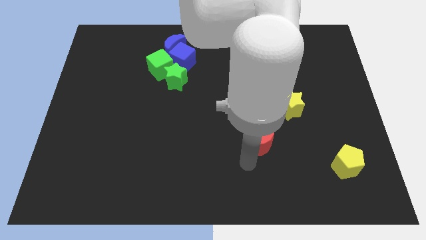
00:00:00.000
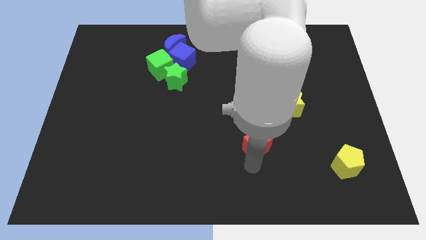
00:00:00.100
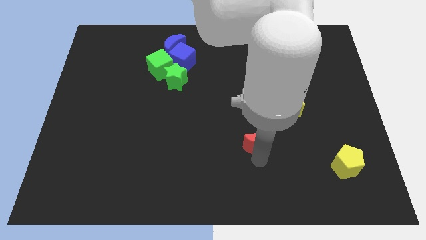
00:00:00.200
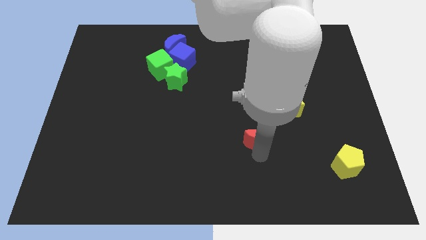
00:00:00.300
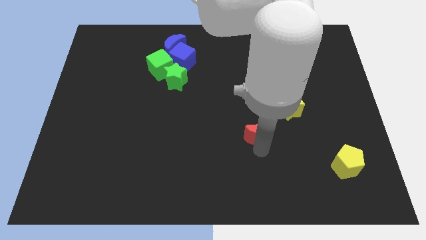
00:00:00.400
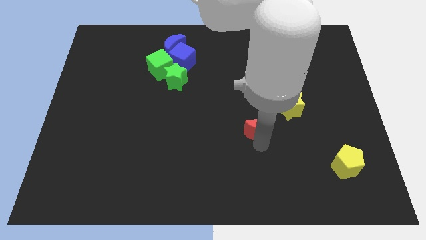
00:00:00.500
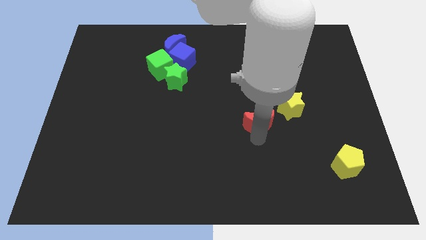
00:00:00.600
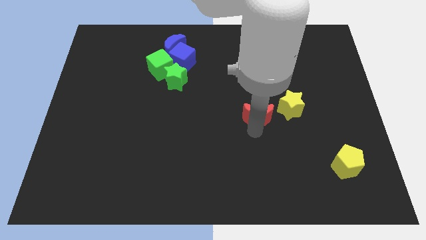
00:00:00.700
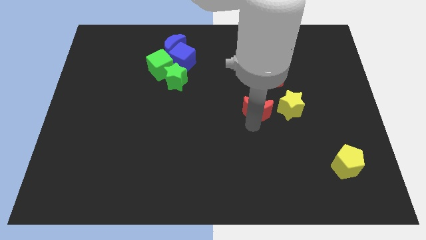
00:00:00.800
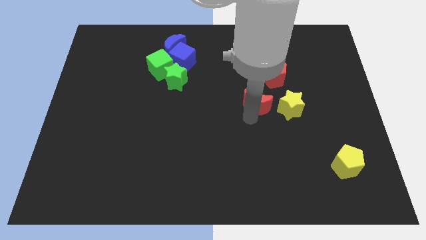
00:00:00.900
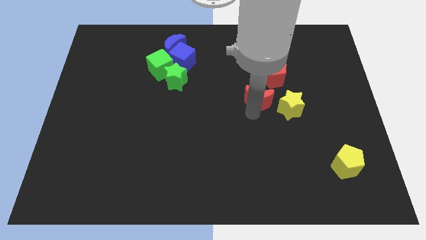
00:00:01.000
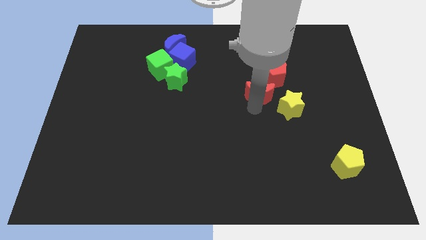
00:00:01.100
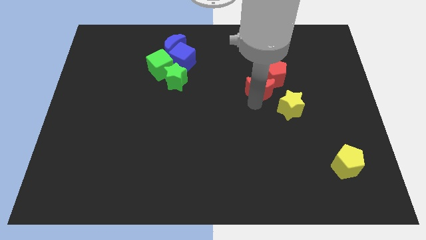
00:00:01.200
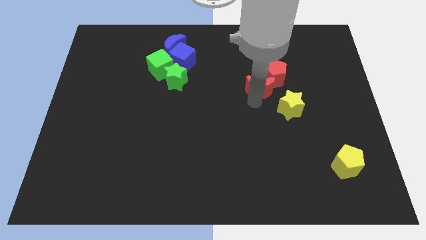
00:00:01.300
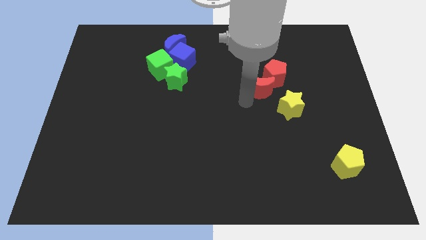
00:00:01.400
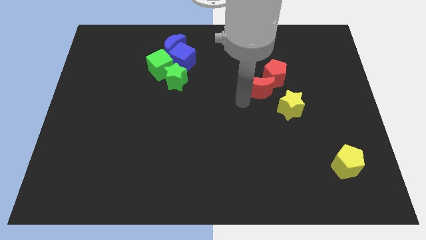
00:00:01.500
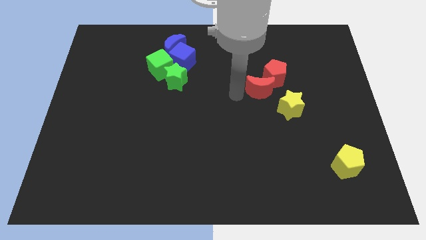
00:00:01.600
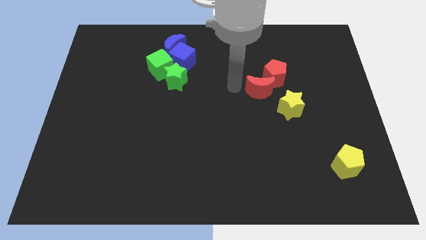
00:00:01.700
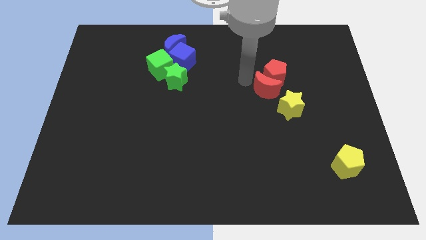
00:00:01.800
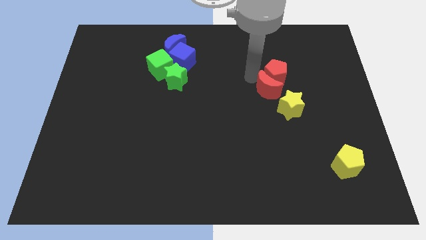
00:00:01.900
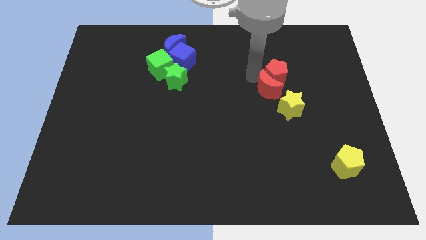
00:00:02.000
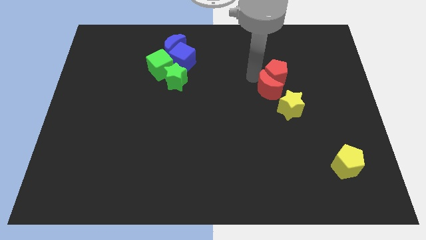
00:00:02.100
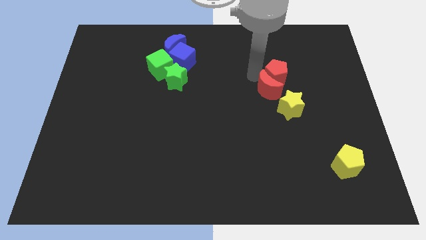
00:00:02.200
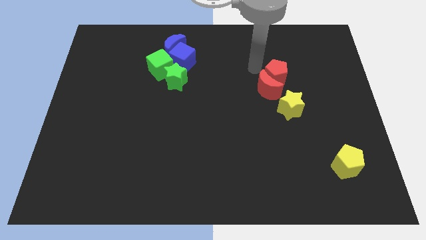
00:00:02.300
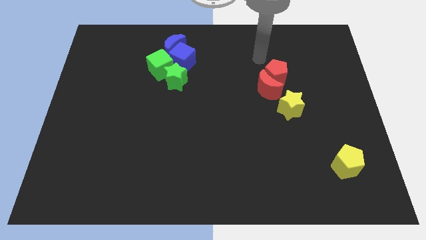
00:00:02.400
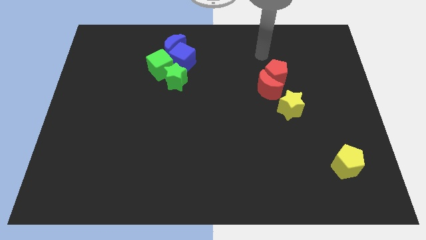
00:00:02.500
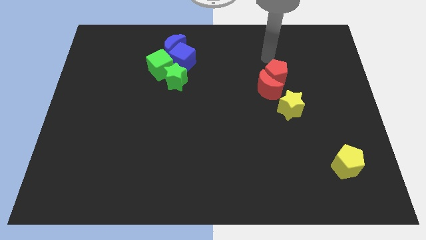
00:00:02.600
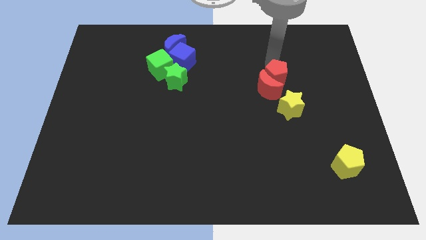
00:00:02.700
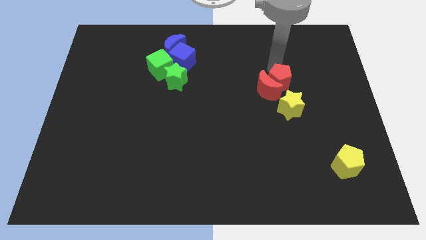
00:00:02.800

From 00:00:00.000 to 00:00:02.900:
point your arm above red pentagon

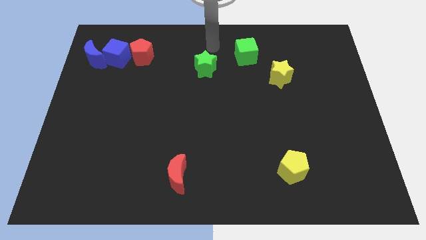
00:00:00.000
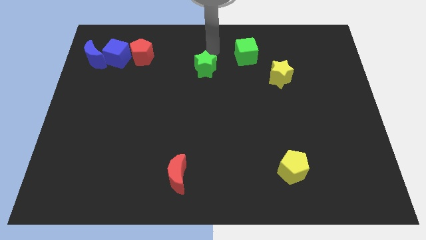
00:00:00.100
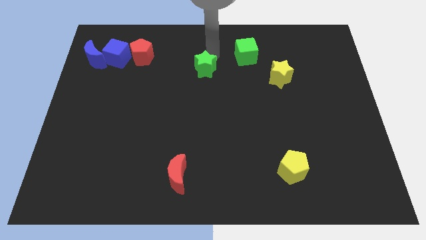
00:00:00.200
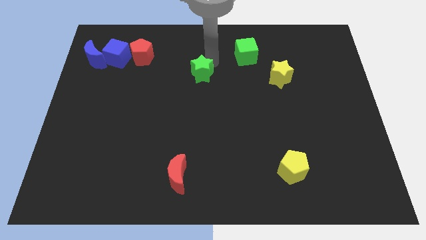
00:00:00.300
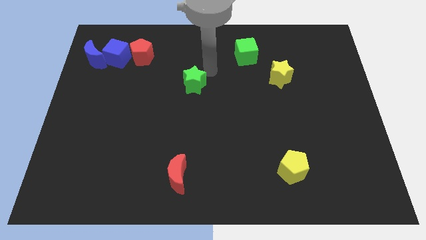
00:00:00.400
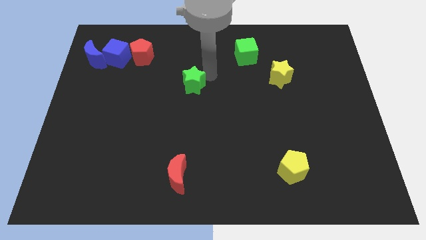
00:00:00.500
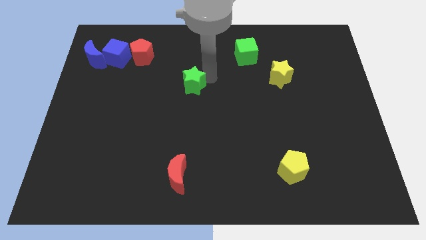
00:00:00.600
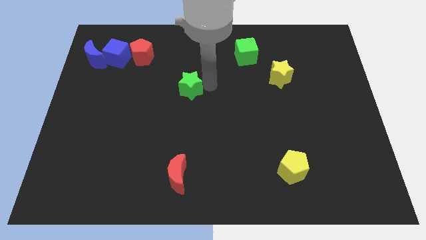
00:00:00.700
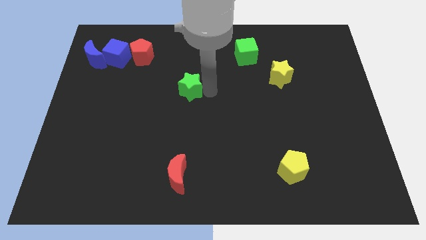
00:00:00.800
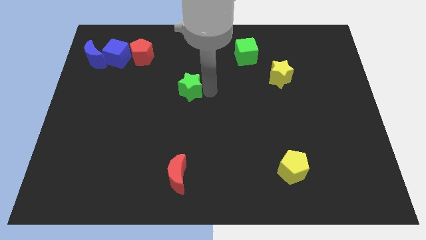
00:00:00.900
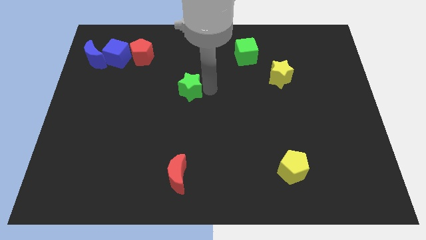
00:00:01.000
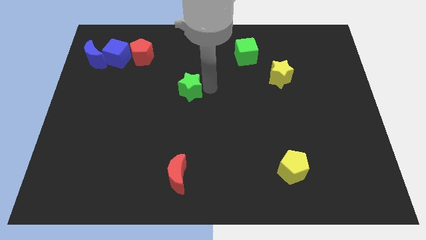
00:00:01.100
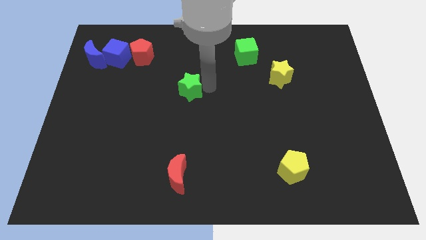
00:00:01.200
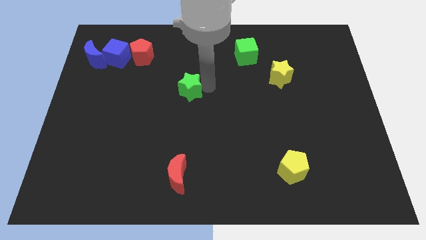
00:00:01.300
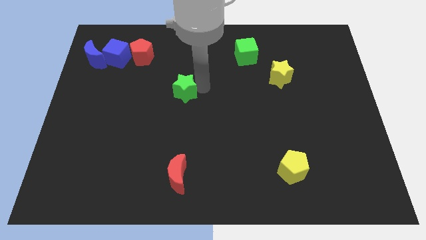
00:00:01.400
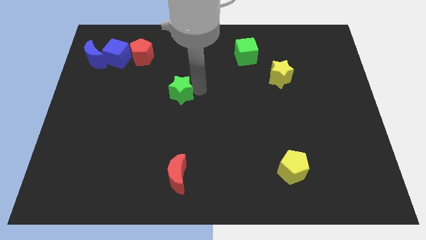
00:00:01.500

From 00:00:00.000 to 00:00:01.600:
move the green star vertically above the red crescent

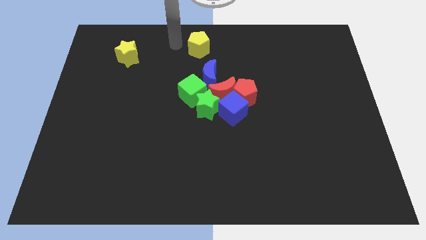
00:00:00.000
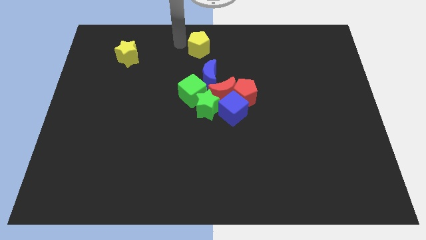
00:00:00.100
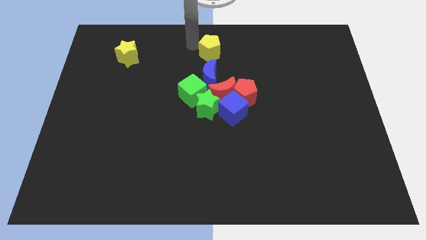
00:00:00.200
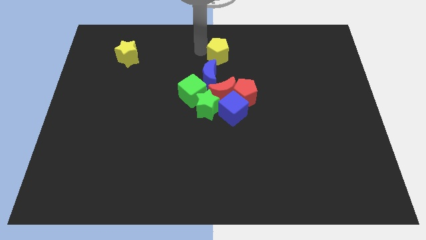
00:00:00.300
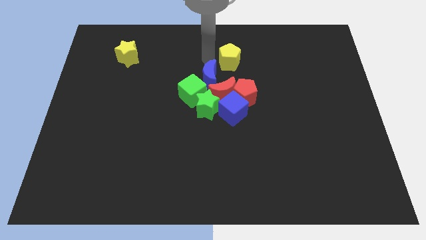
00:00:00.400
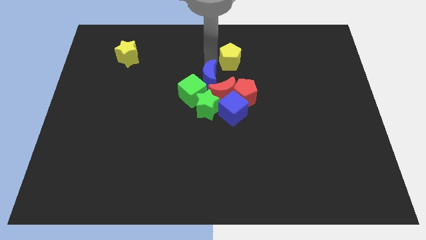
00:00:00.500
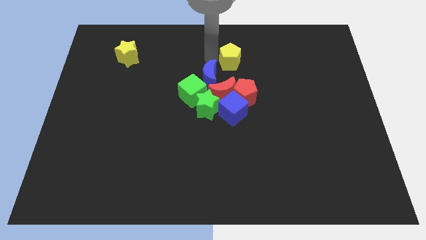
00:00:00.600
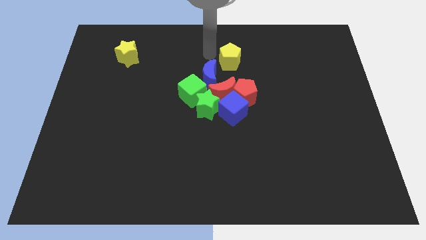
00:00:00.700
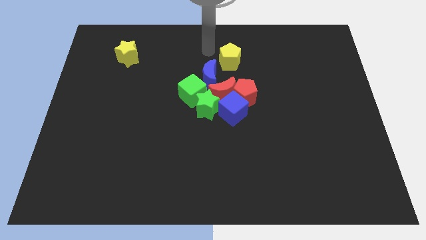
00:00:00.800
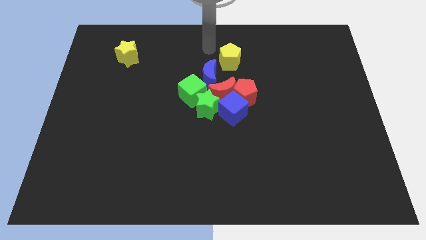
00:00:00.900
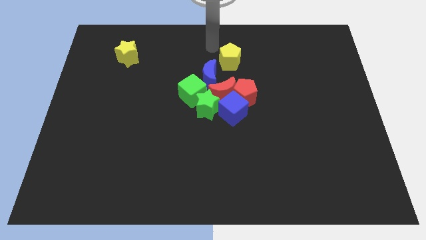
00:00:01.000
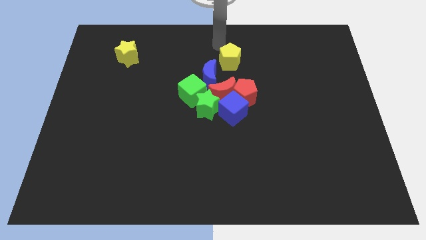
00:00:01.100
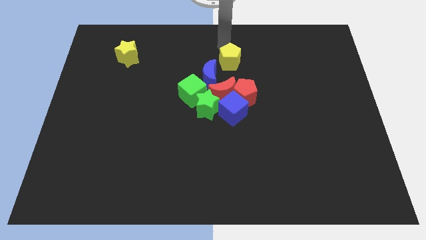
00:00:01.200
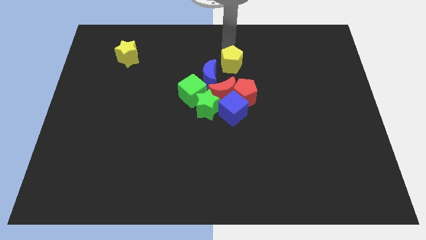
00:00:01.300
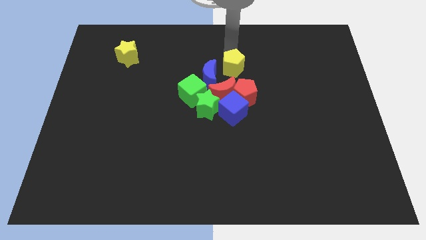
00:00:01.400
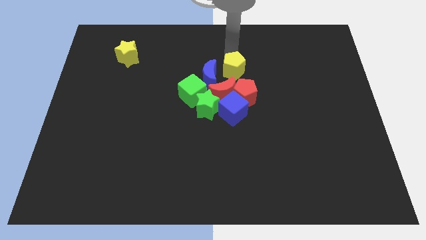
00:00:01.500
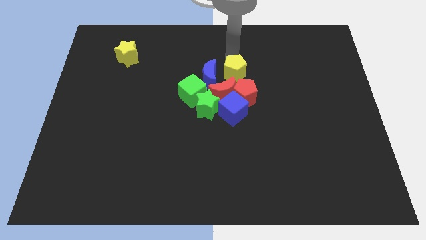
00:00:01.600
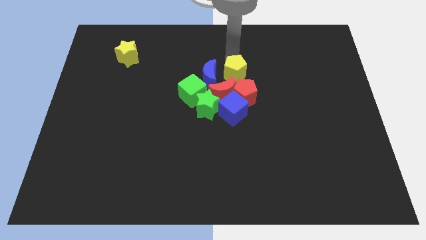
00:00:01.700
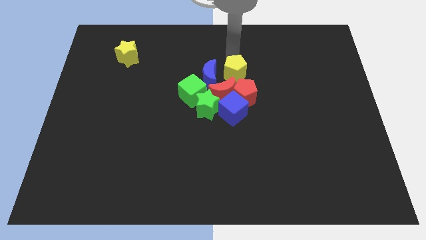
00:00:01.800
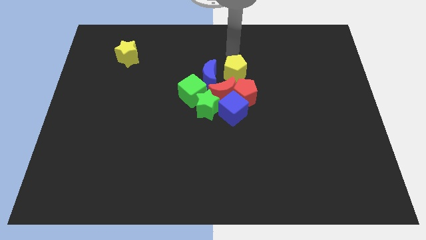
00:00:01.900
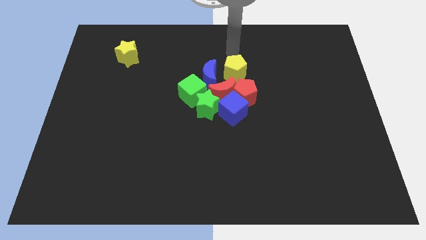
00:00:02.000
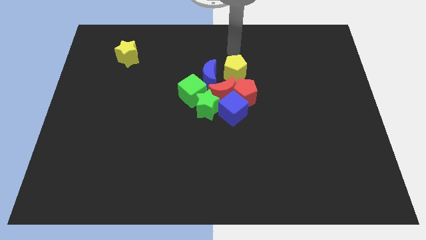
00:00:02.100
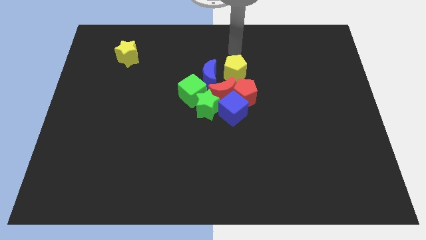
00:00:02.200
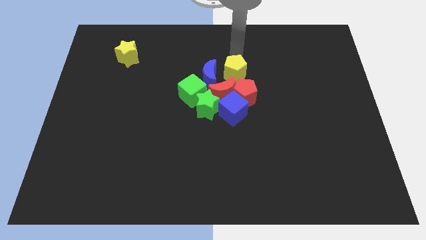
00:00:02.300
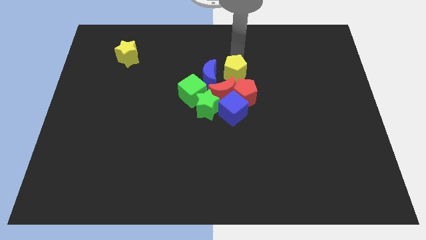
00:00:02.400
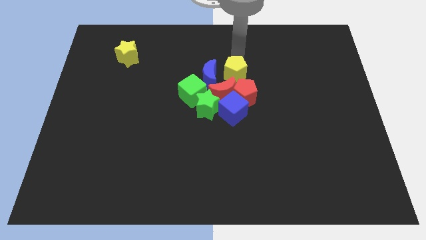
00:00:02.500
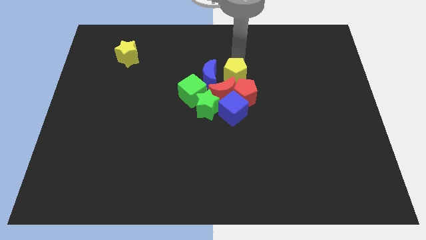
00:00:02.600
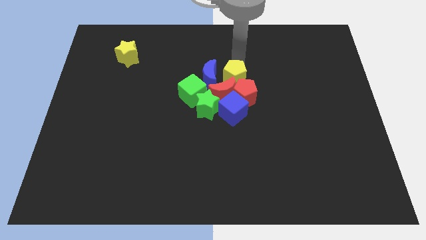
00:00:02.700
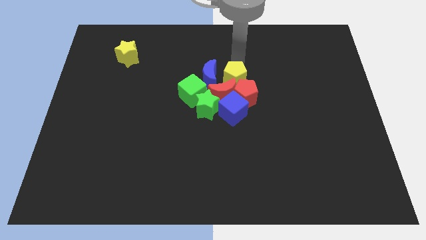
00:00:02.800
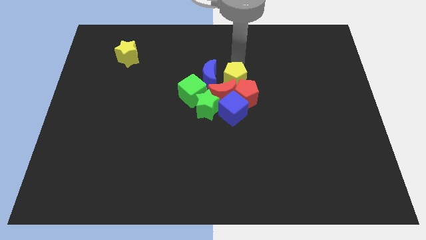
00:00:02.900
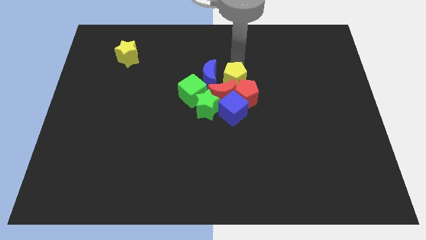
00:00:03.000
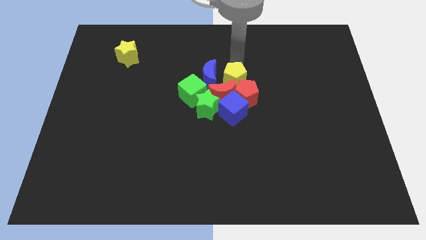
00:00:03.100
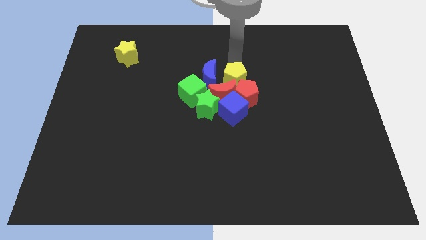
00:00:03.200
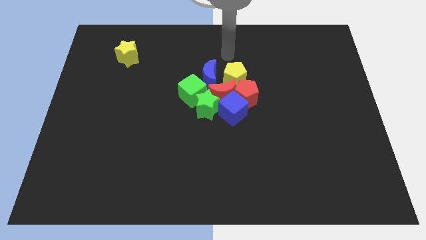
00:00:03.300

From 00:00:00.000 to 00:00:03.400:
move the yellow pentagon into the top side of the red blocks

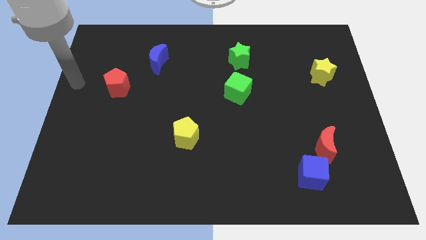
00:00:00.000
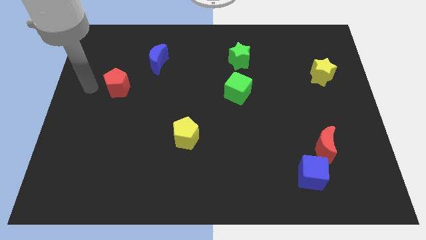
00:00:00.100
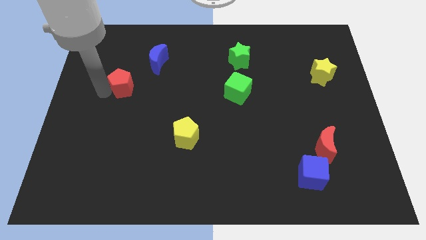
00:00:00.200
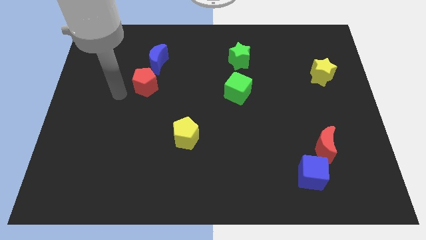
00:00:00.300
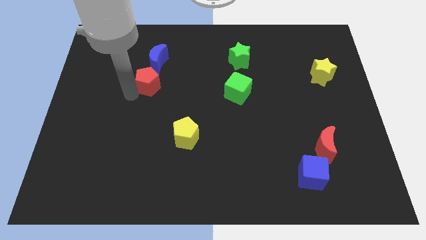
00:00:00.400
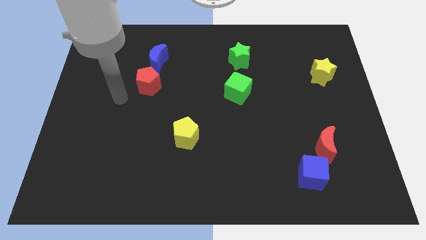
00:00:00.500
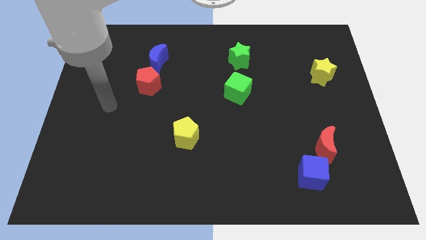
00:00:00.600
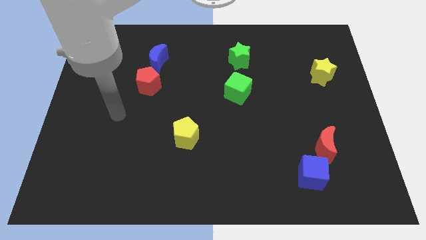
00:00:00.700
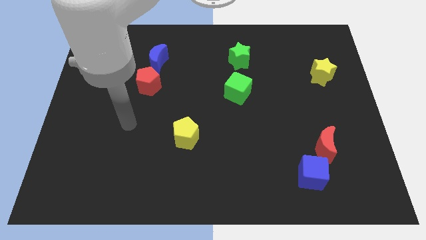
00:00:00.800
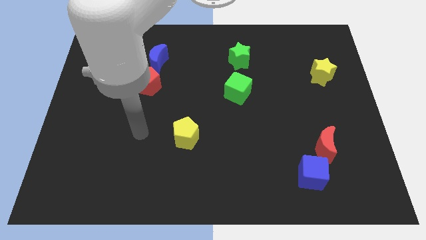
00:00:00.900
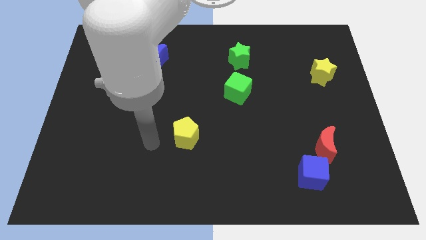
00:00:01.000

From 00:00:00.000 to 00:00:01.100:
slide the red pentagon to the bottom side of the blue moon

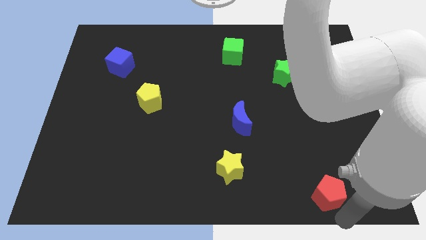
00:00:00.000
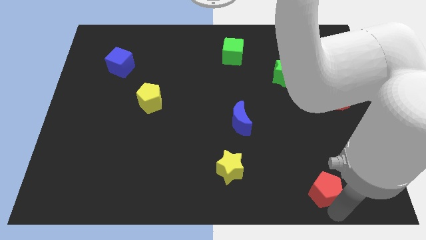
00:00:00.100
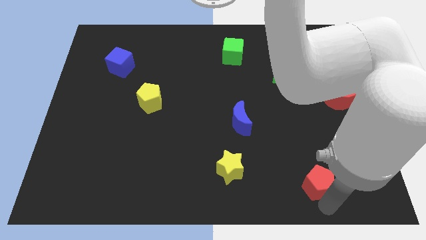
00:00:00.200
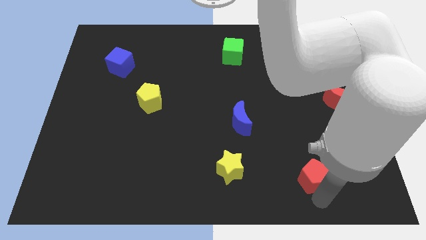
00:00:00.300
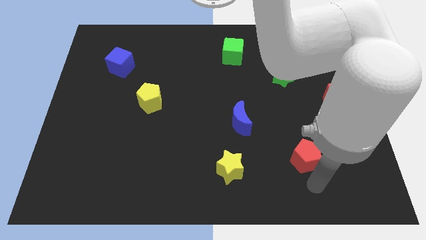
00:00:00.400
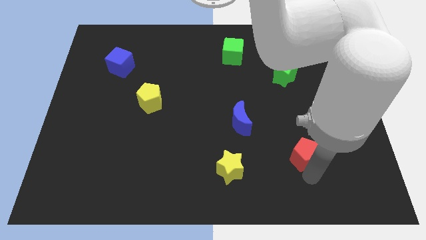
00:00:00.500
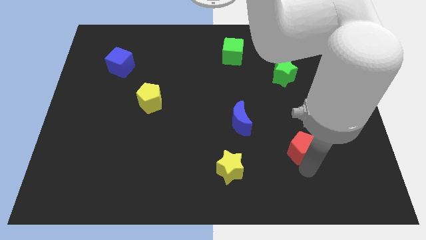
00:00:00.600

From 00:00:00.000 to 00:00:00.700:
move the red pentagon slightly upwards of the board
